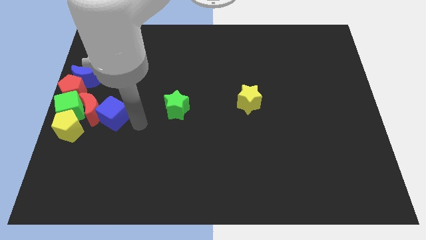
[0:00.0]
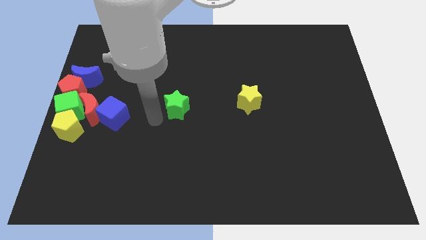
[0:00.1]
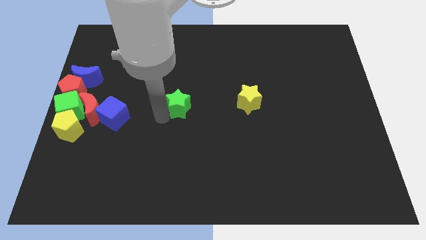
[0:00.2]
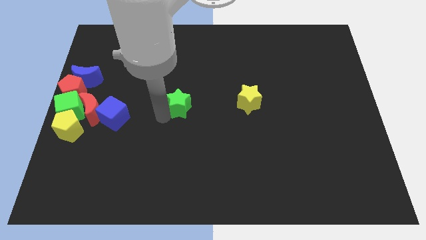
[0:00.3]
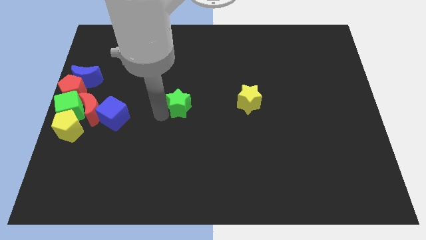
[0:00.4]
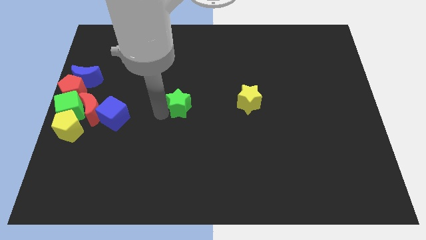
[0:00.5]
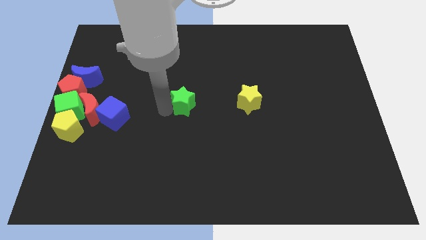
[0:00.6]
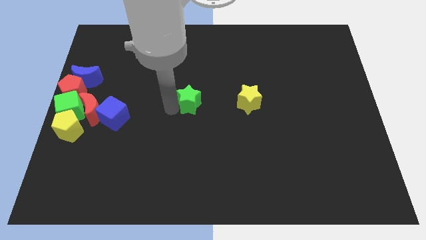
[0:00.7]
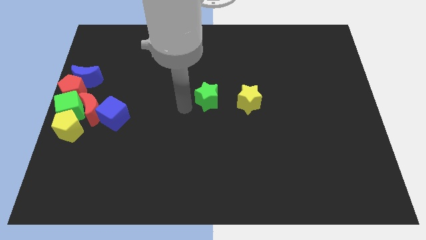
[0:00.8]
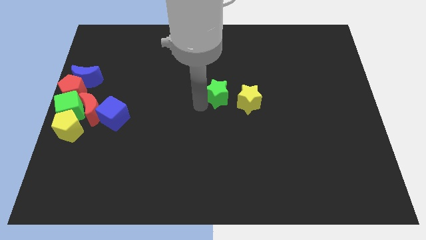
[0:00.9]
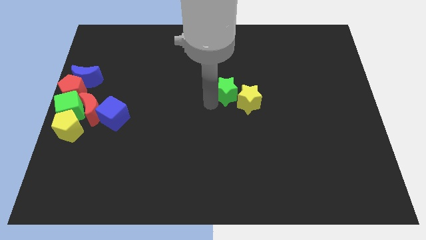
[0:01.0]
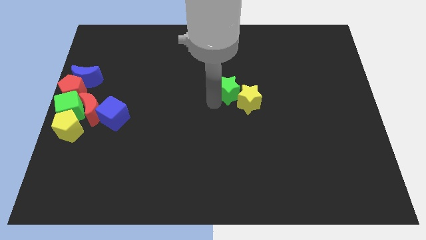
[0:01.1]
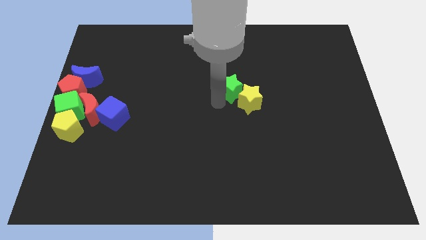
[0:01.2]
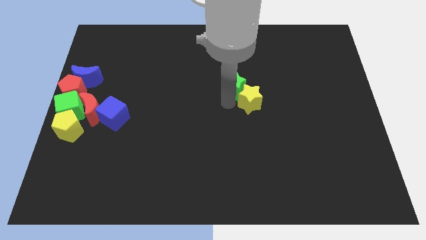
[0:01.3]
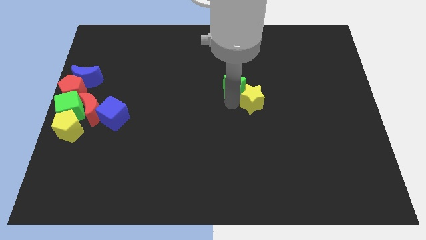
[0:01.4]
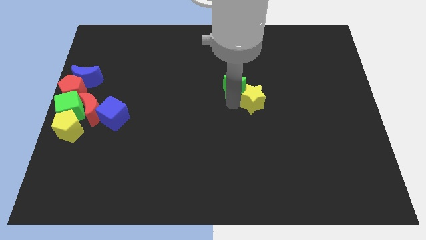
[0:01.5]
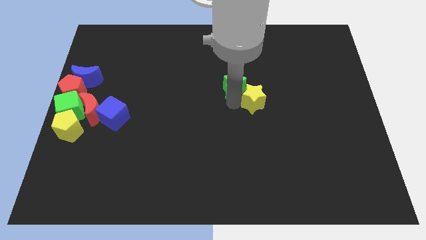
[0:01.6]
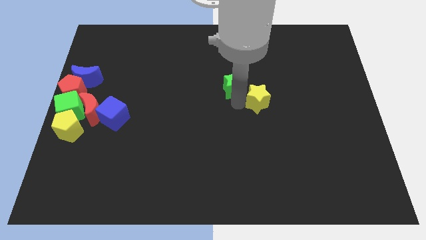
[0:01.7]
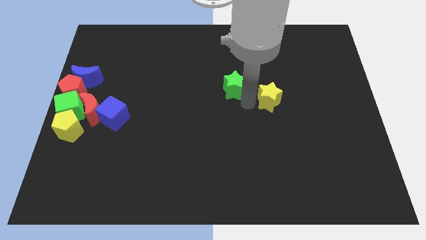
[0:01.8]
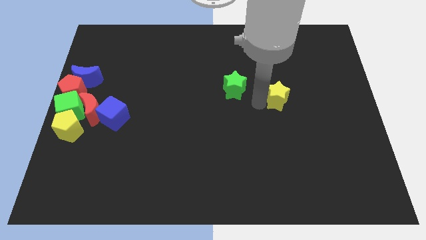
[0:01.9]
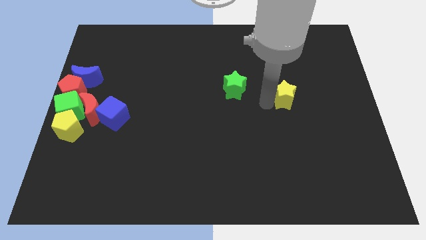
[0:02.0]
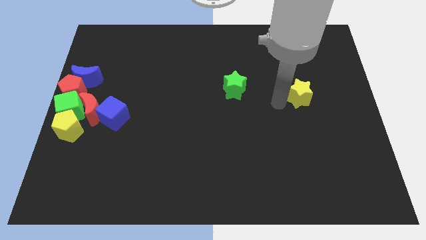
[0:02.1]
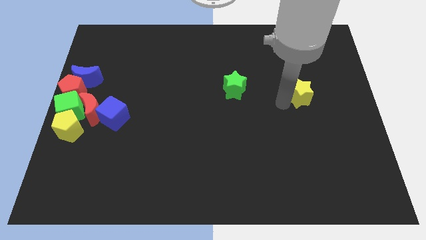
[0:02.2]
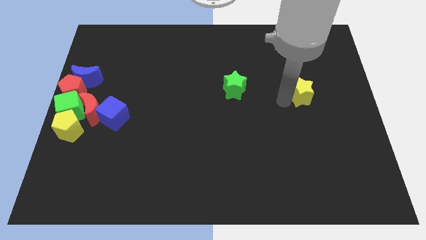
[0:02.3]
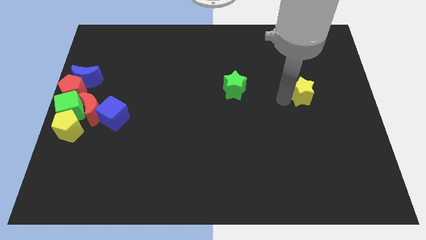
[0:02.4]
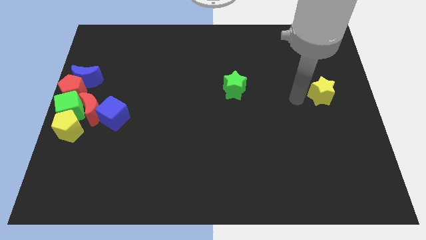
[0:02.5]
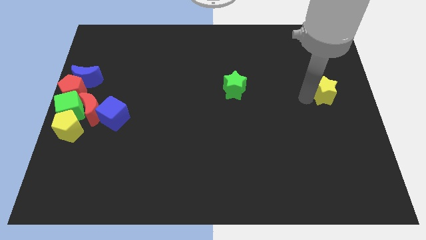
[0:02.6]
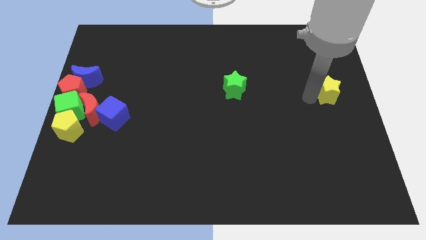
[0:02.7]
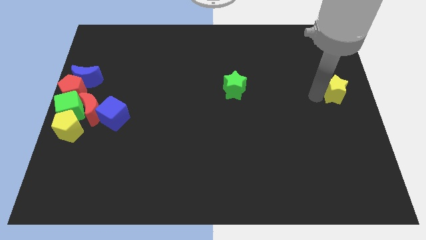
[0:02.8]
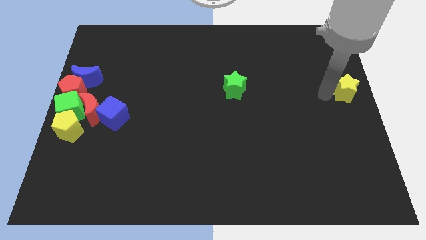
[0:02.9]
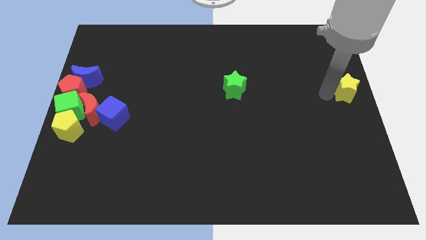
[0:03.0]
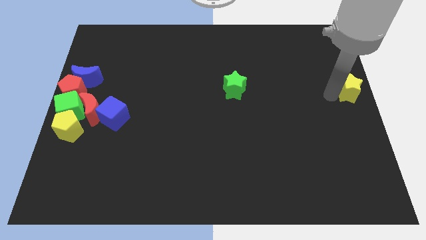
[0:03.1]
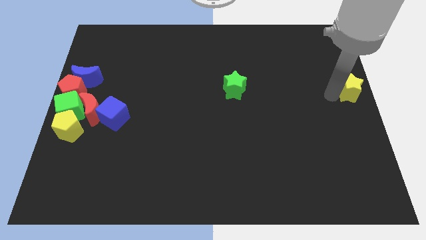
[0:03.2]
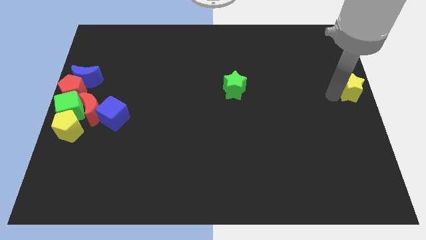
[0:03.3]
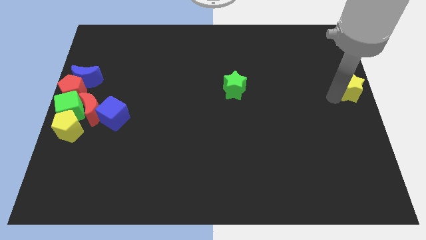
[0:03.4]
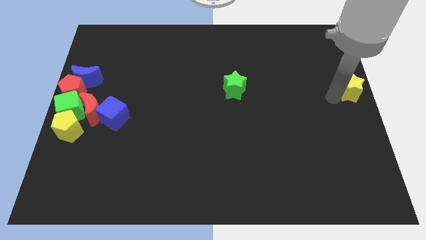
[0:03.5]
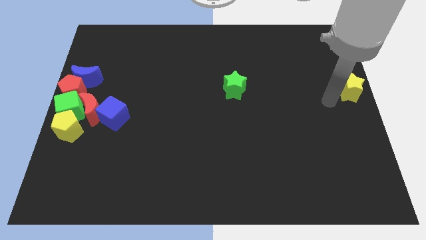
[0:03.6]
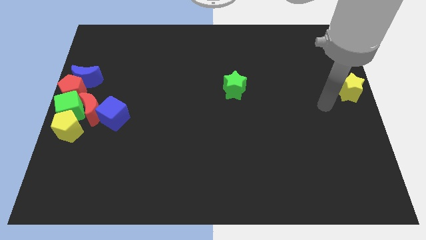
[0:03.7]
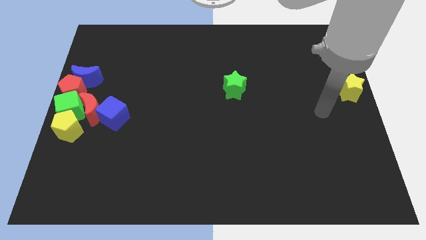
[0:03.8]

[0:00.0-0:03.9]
arrange both the starts horizontally to each other

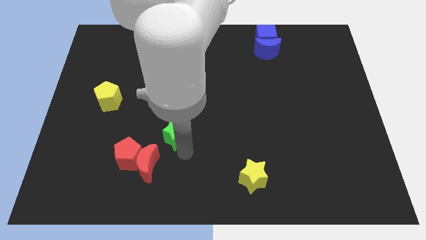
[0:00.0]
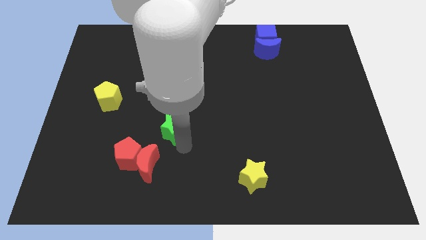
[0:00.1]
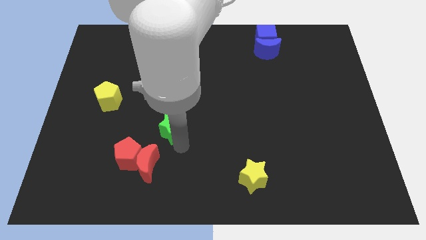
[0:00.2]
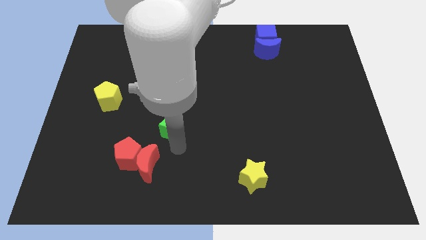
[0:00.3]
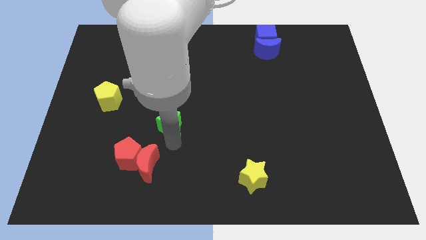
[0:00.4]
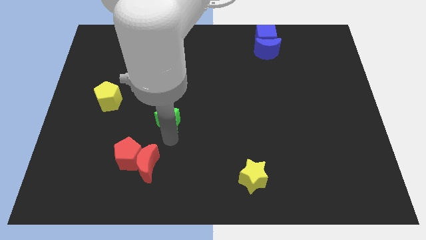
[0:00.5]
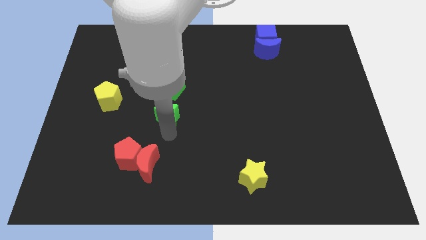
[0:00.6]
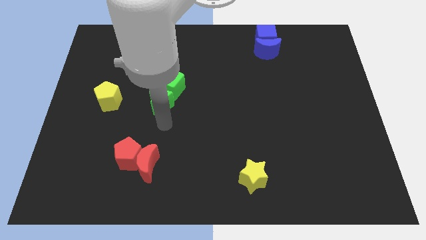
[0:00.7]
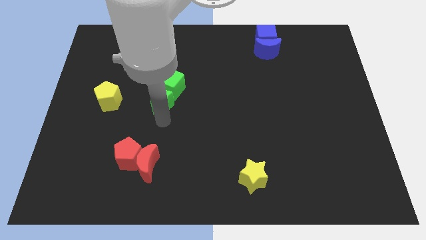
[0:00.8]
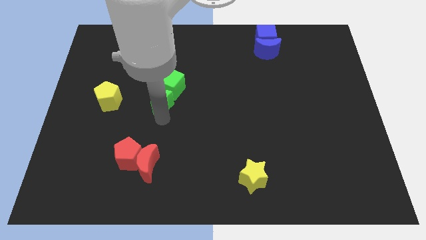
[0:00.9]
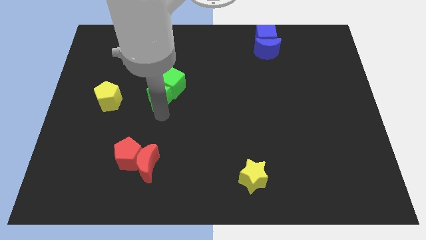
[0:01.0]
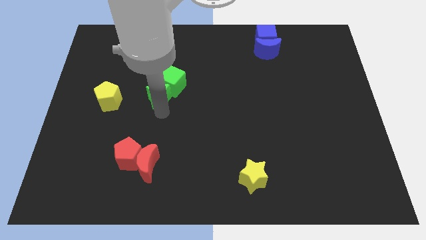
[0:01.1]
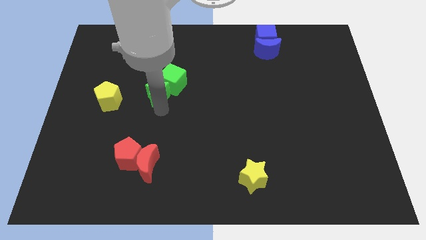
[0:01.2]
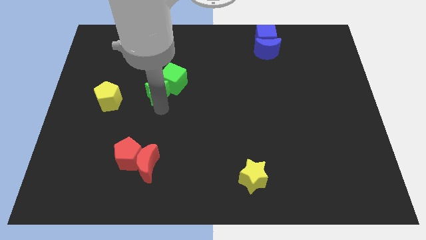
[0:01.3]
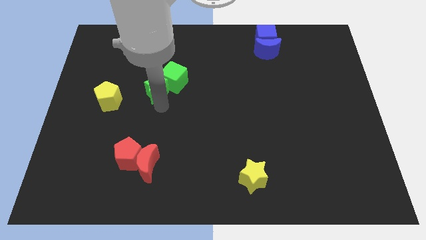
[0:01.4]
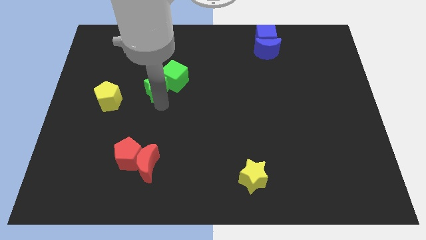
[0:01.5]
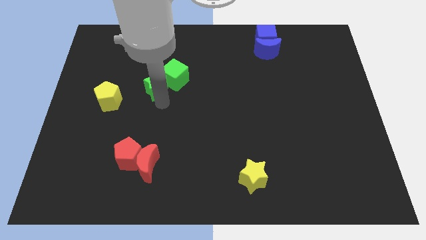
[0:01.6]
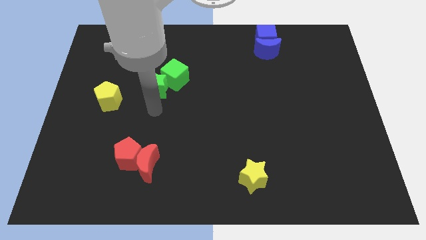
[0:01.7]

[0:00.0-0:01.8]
push the green star into the green moon

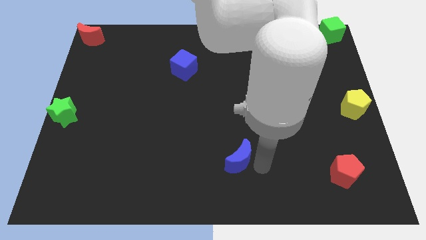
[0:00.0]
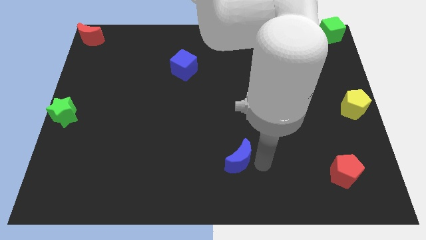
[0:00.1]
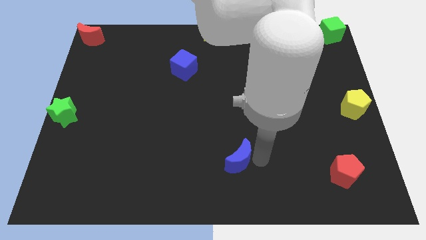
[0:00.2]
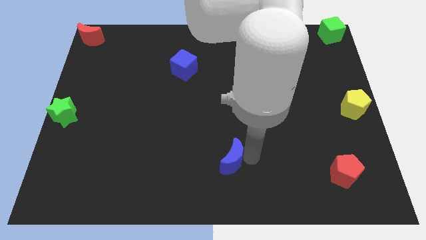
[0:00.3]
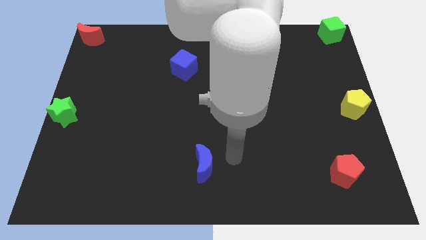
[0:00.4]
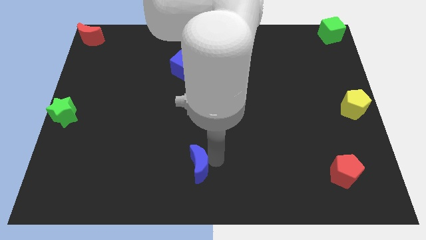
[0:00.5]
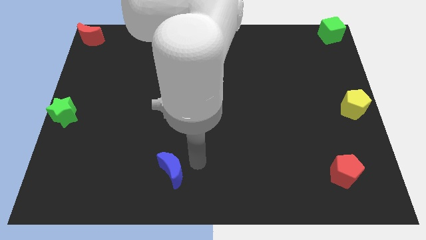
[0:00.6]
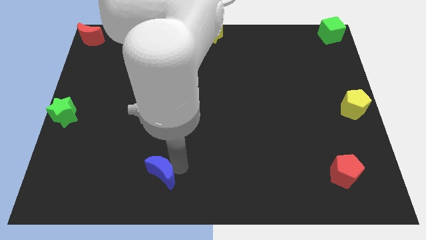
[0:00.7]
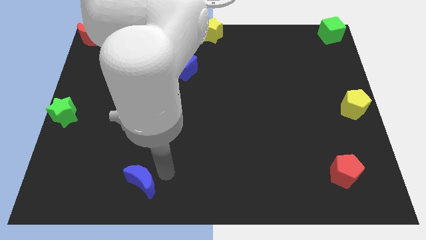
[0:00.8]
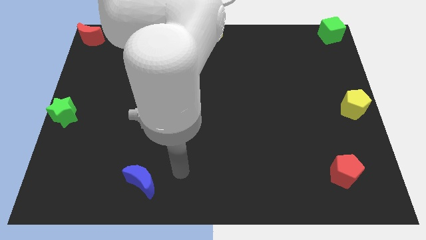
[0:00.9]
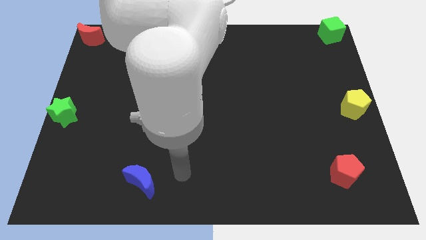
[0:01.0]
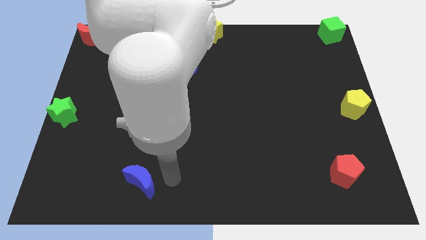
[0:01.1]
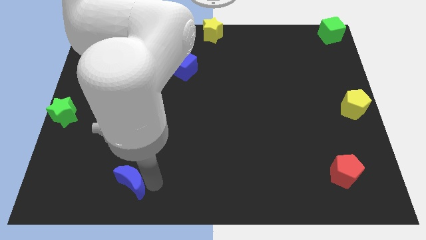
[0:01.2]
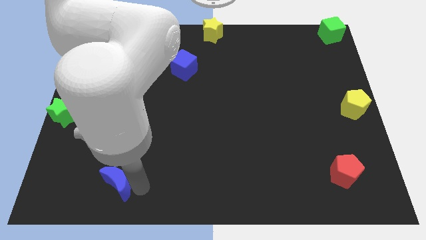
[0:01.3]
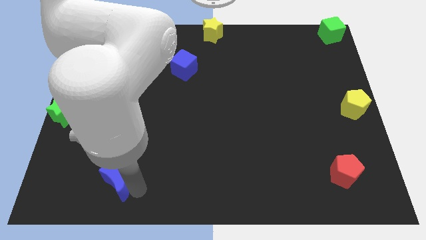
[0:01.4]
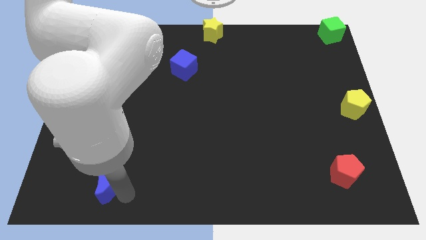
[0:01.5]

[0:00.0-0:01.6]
move the blue moon to the left side of the board

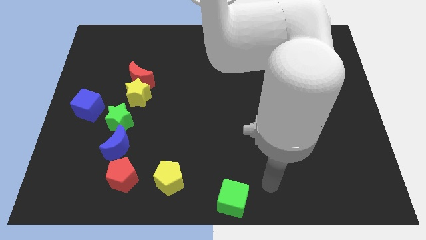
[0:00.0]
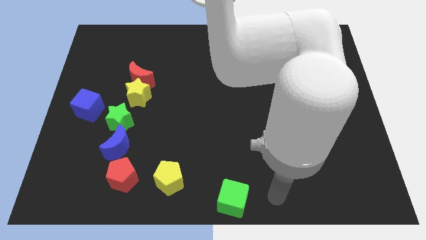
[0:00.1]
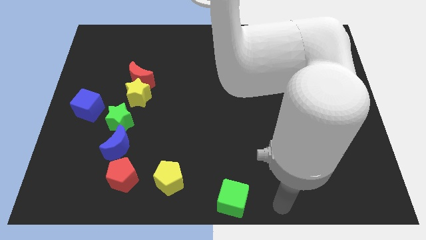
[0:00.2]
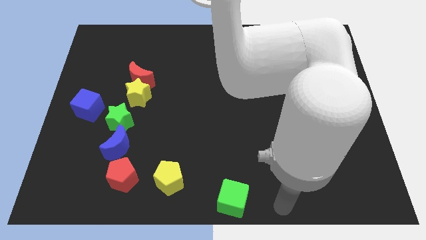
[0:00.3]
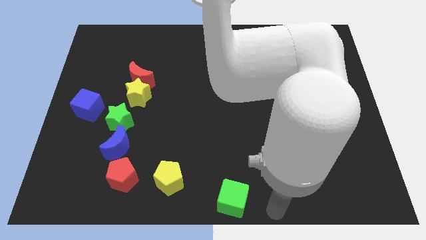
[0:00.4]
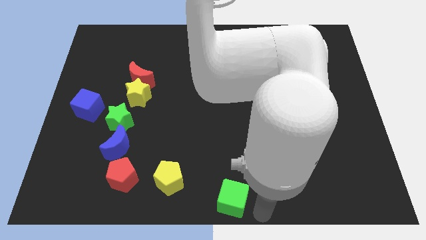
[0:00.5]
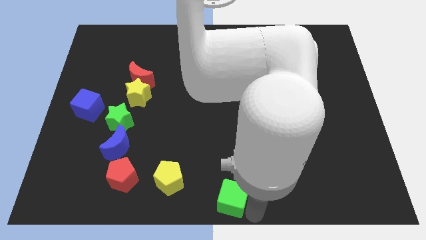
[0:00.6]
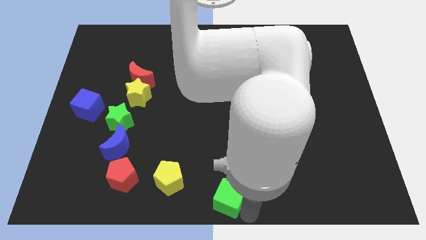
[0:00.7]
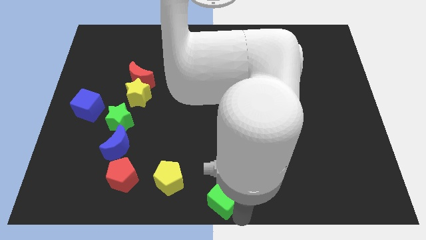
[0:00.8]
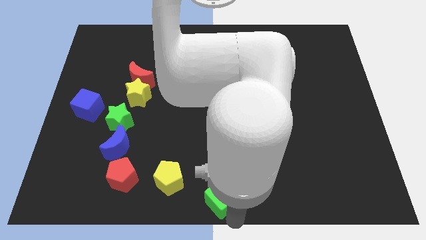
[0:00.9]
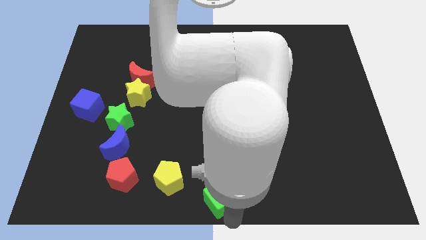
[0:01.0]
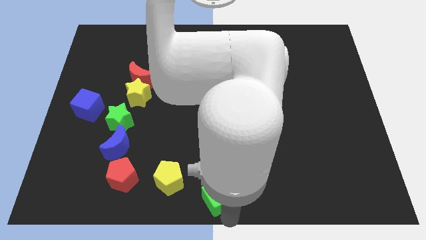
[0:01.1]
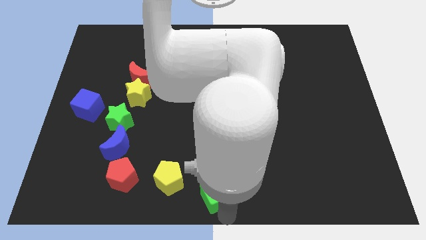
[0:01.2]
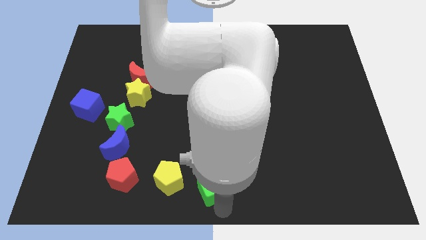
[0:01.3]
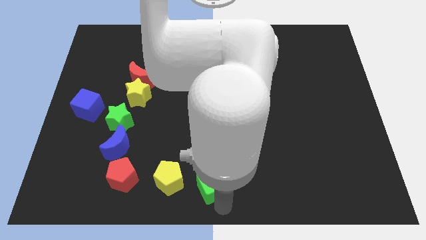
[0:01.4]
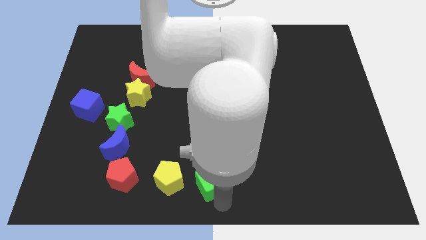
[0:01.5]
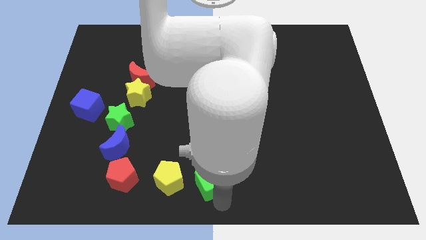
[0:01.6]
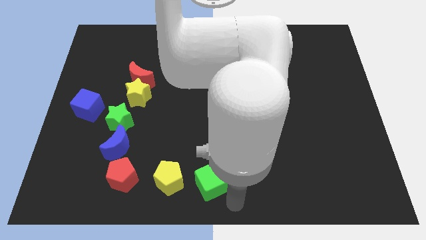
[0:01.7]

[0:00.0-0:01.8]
drag the green cube parallel right to the yellow pentagon
